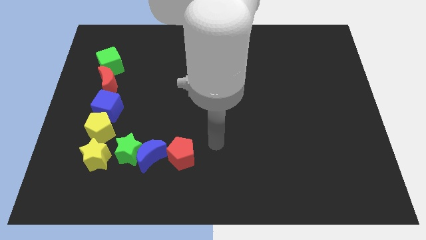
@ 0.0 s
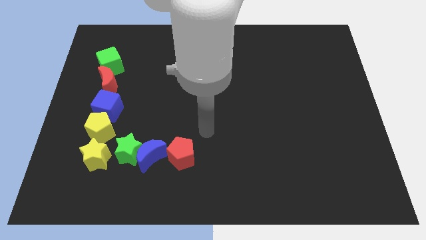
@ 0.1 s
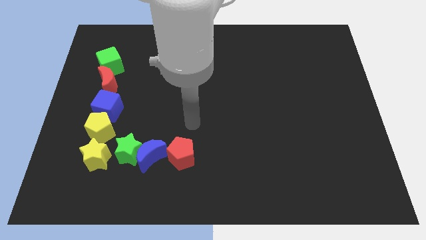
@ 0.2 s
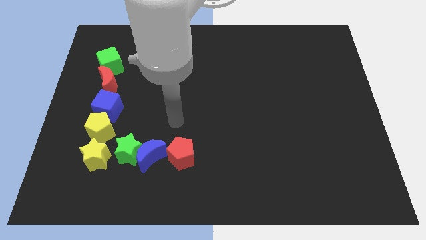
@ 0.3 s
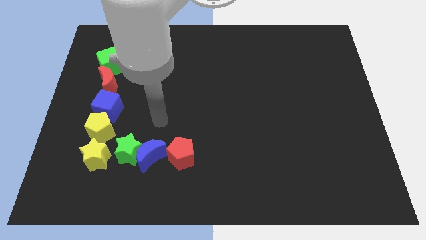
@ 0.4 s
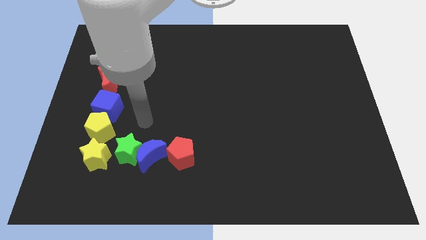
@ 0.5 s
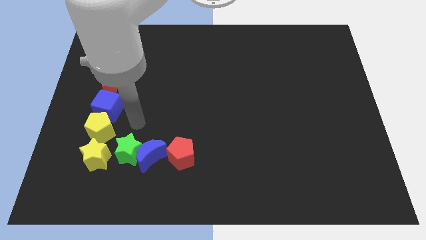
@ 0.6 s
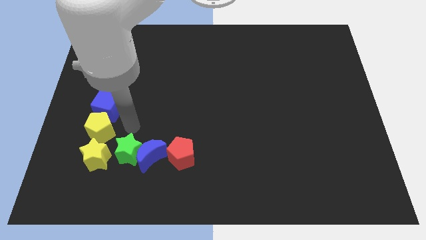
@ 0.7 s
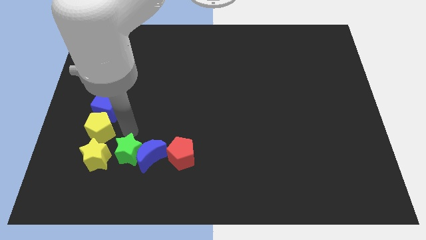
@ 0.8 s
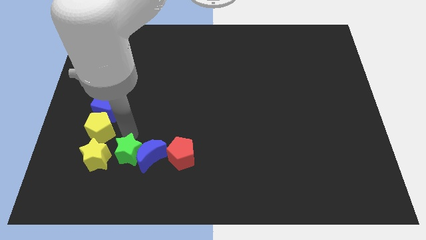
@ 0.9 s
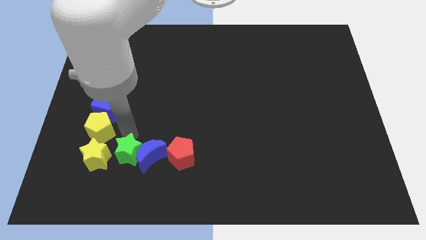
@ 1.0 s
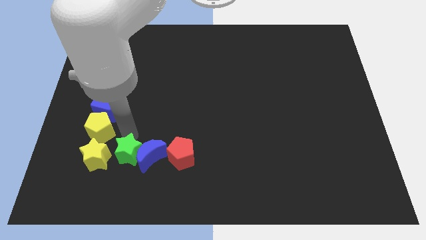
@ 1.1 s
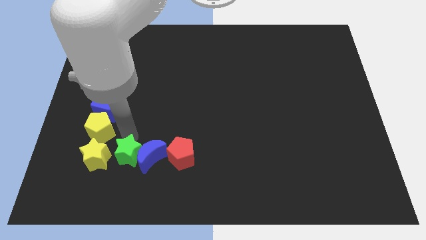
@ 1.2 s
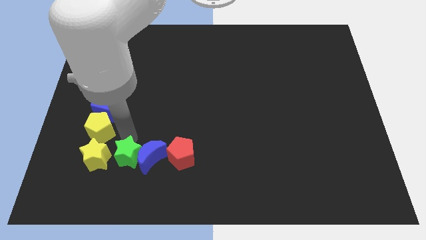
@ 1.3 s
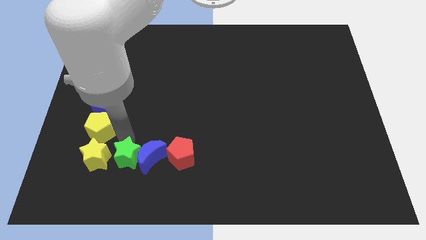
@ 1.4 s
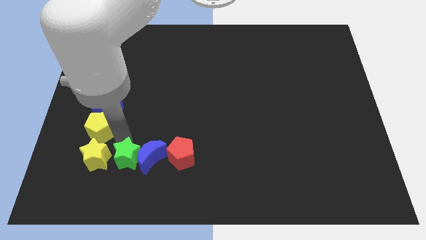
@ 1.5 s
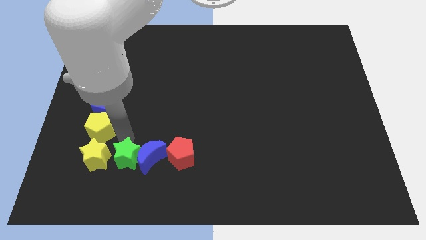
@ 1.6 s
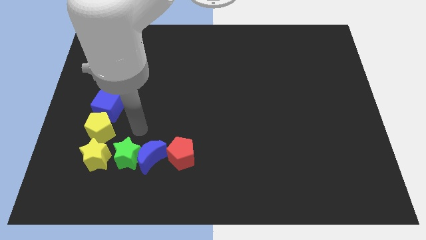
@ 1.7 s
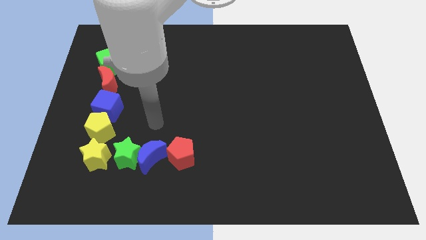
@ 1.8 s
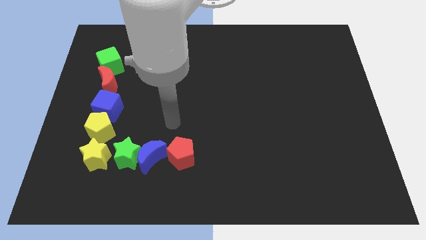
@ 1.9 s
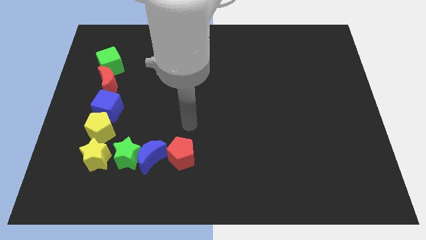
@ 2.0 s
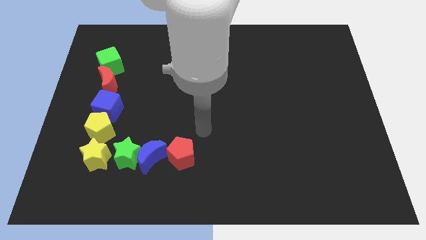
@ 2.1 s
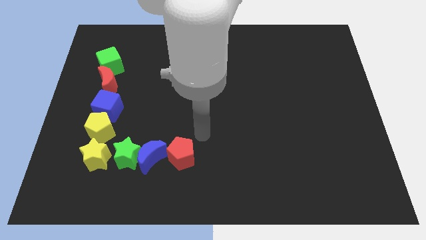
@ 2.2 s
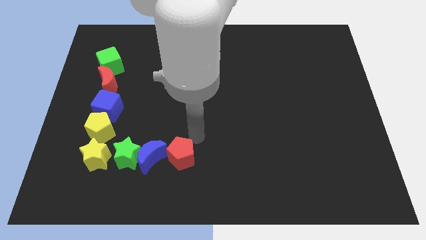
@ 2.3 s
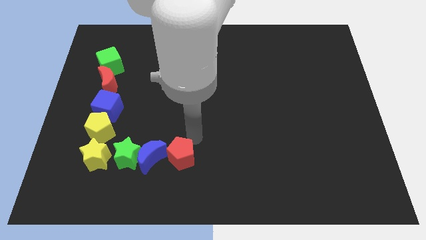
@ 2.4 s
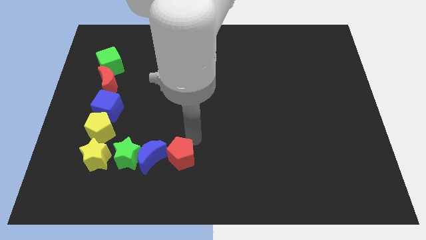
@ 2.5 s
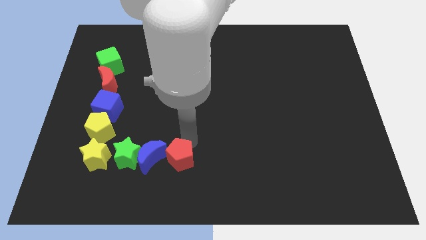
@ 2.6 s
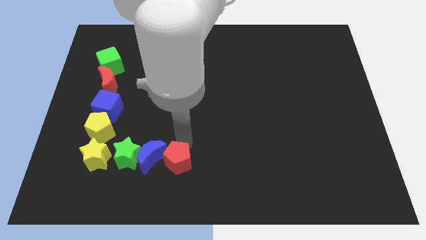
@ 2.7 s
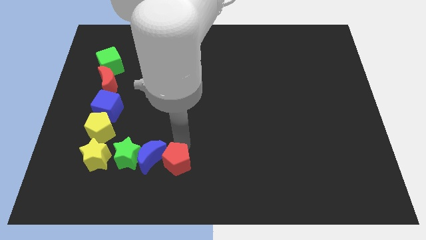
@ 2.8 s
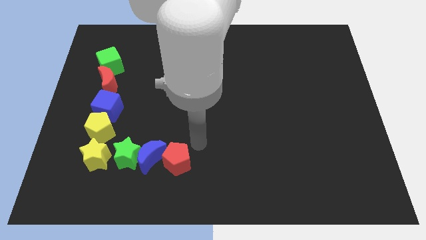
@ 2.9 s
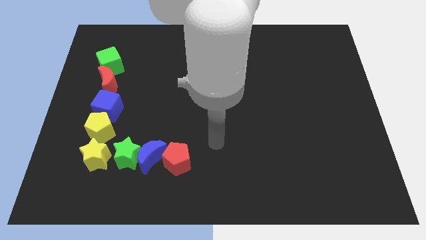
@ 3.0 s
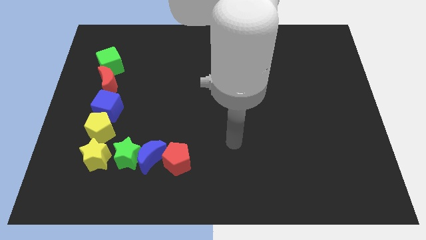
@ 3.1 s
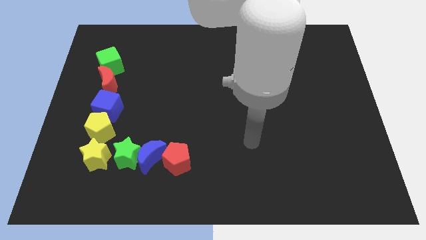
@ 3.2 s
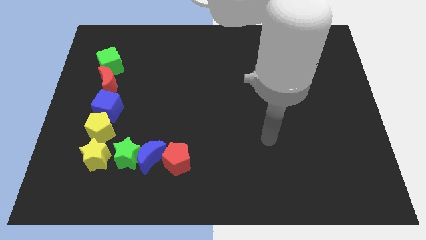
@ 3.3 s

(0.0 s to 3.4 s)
push green star red pentagon slightly towards downward

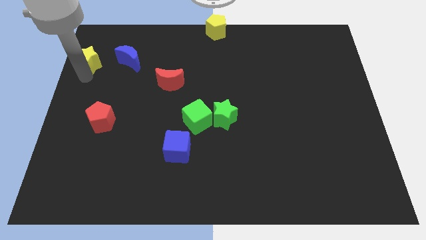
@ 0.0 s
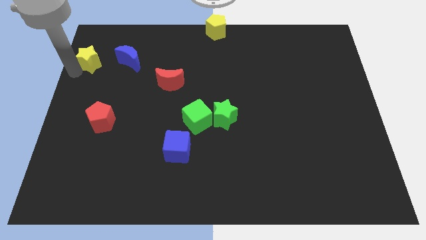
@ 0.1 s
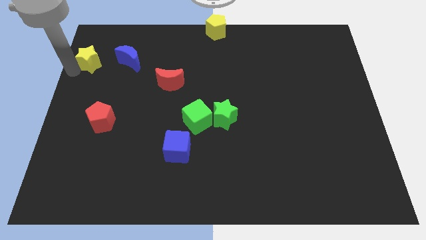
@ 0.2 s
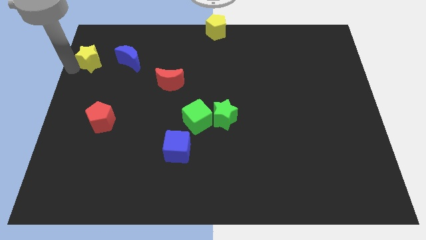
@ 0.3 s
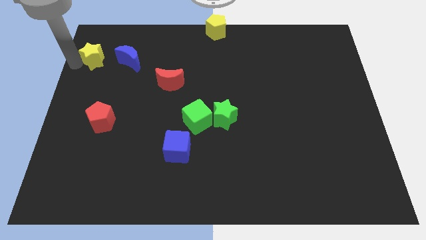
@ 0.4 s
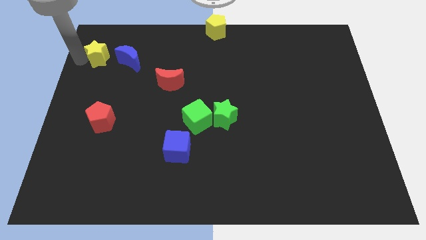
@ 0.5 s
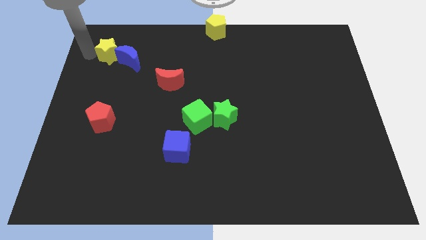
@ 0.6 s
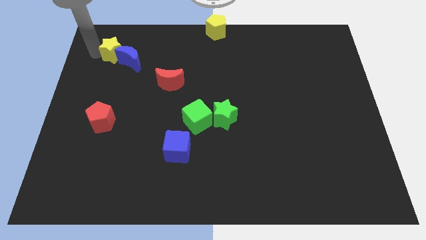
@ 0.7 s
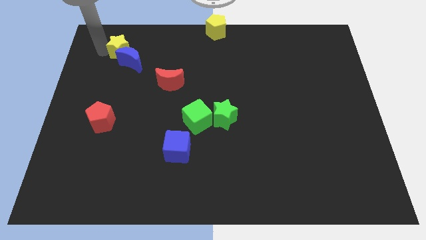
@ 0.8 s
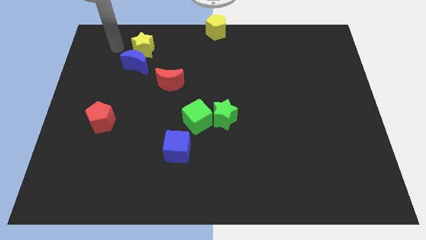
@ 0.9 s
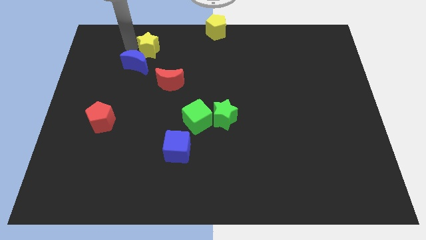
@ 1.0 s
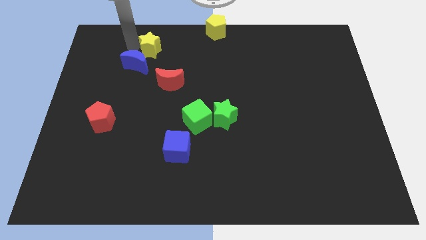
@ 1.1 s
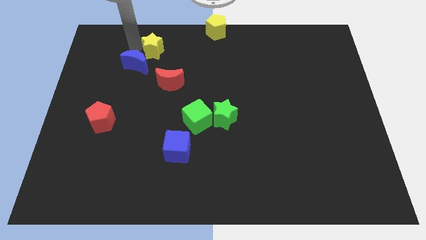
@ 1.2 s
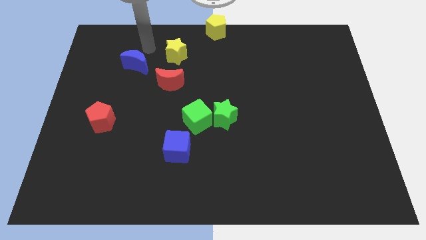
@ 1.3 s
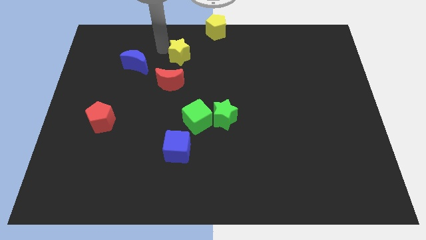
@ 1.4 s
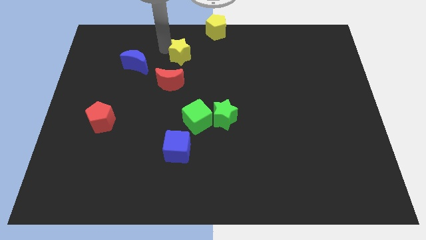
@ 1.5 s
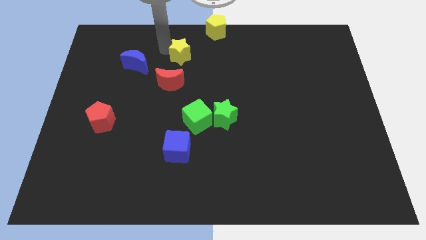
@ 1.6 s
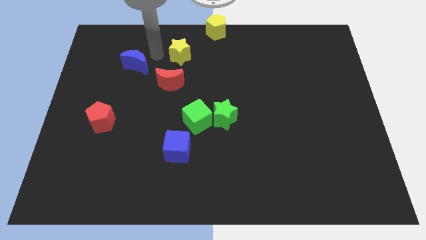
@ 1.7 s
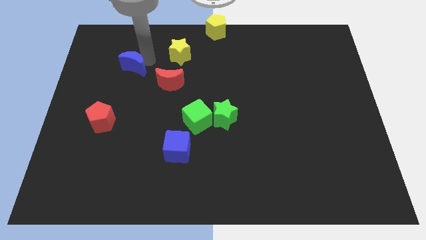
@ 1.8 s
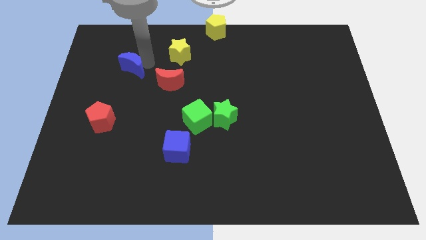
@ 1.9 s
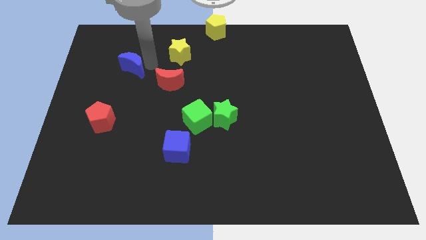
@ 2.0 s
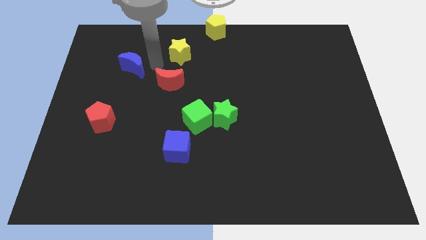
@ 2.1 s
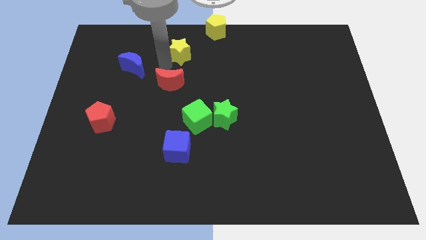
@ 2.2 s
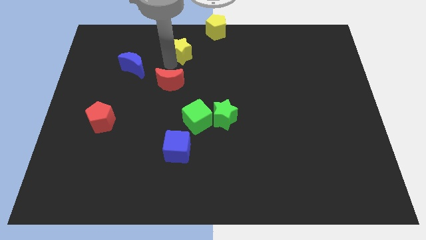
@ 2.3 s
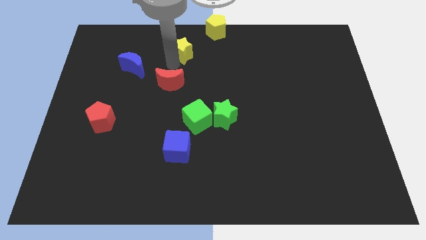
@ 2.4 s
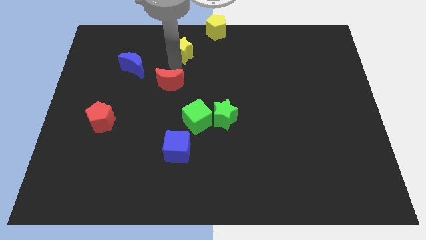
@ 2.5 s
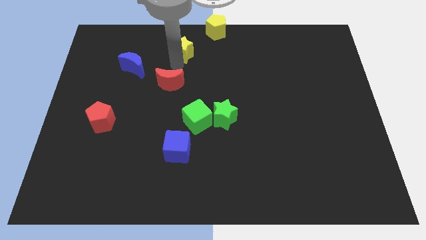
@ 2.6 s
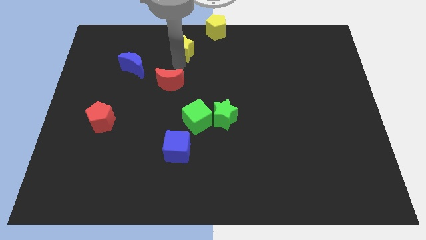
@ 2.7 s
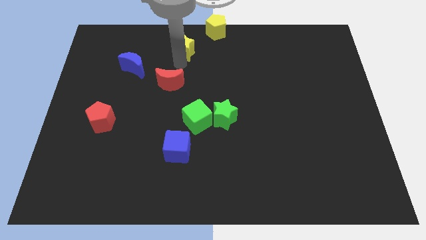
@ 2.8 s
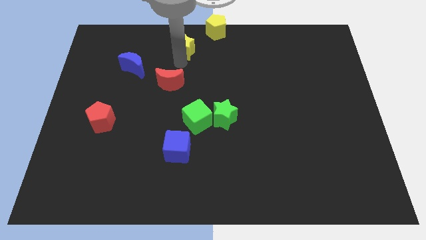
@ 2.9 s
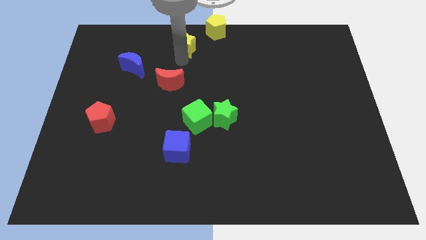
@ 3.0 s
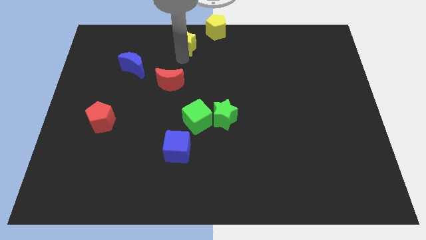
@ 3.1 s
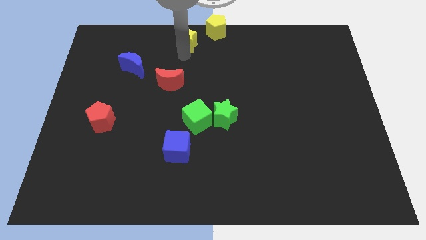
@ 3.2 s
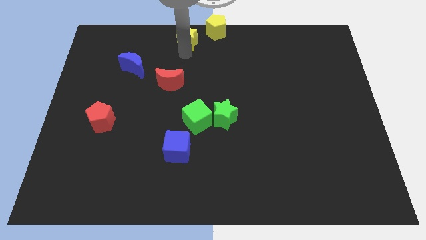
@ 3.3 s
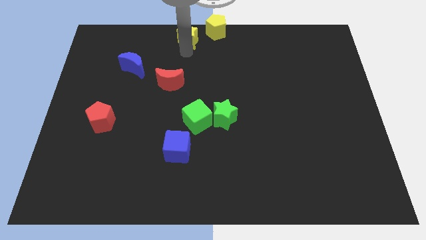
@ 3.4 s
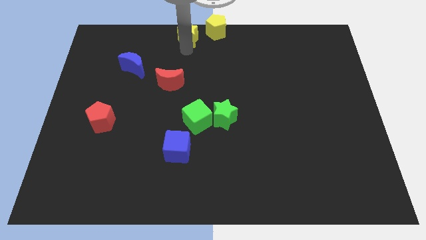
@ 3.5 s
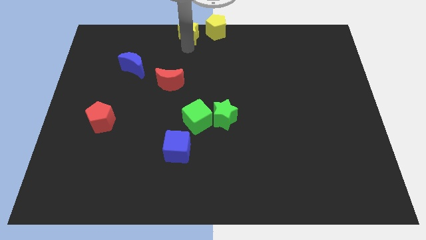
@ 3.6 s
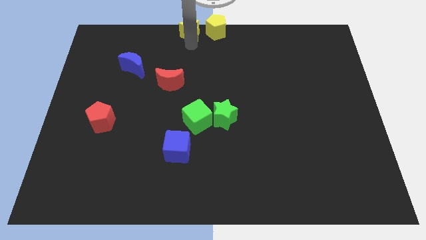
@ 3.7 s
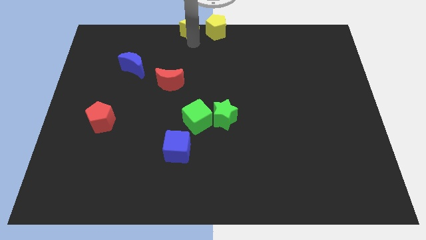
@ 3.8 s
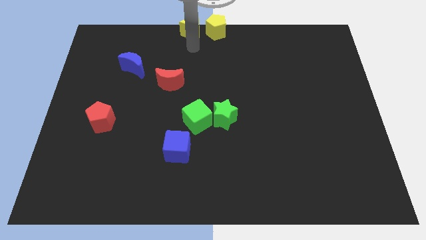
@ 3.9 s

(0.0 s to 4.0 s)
put the yellow star to the left side of the yellow pentagon

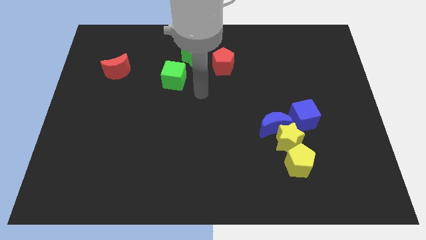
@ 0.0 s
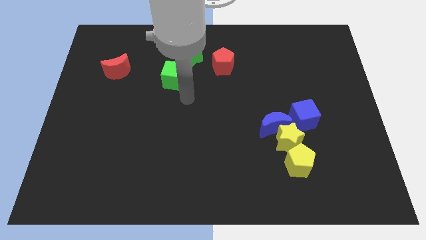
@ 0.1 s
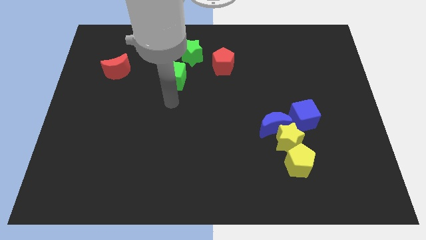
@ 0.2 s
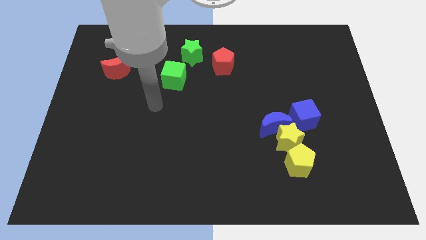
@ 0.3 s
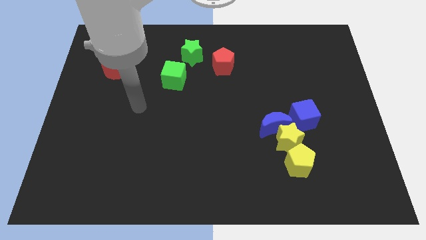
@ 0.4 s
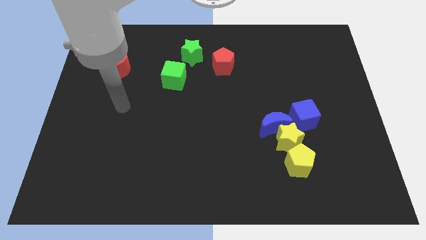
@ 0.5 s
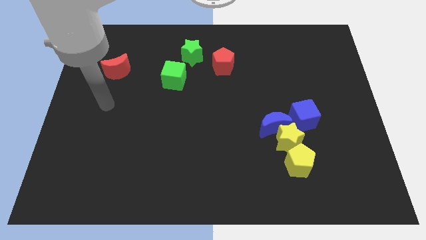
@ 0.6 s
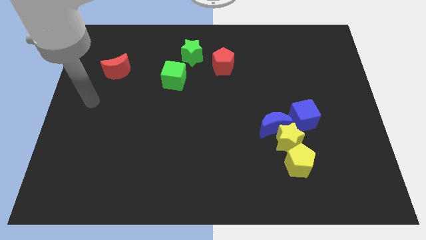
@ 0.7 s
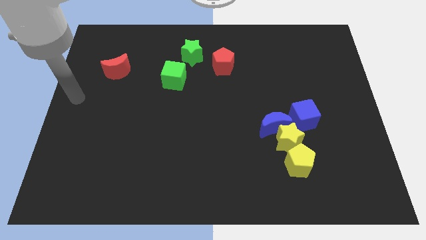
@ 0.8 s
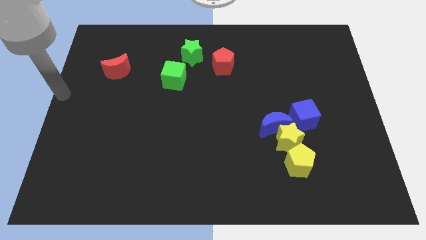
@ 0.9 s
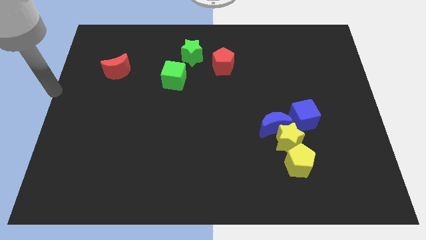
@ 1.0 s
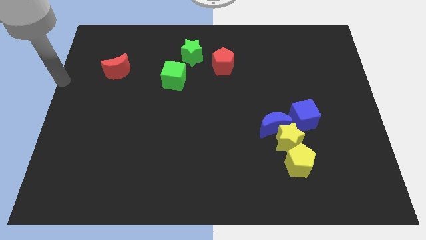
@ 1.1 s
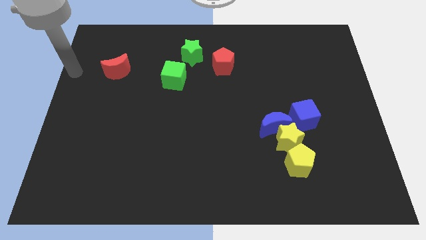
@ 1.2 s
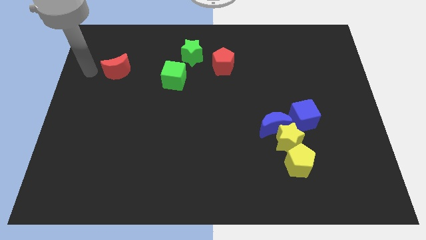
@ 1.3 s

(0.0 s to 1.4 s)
point your arm to the left of red crescent
